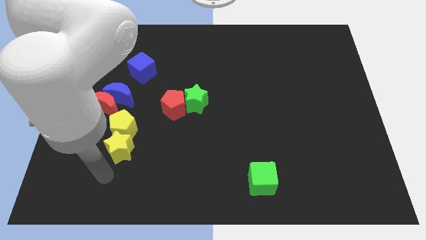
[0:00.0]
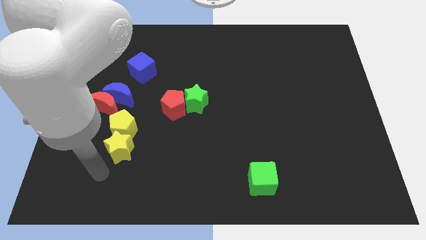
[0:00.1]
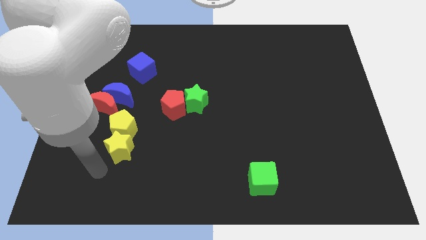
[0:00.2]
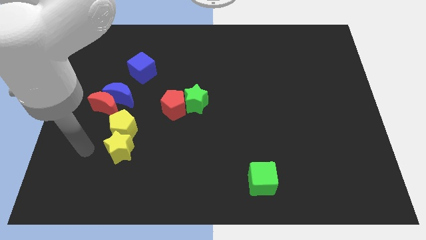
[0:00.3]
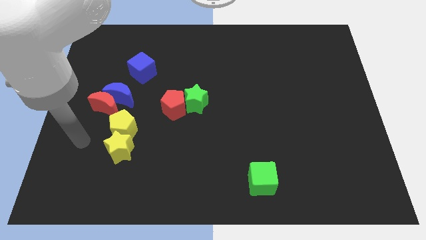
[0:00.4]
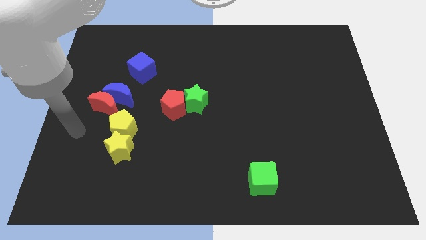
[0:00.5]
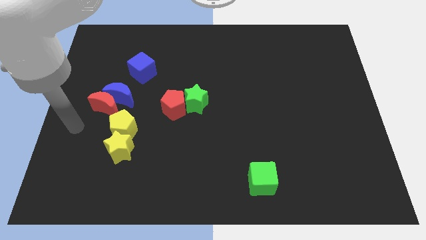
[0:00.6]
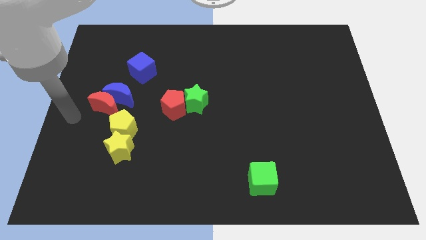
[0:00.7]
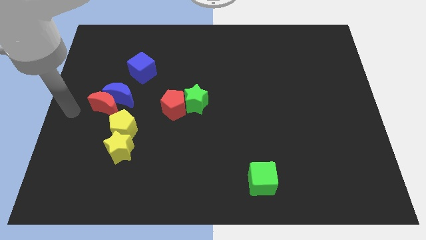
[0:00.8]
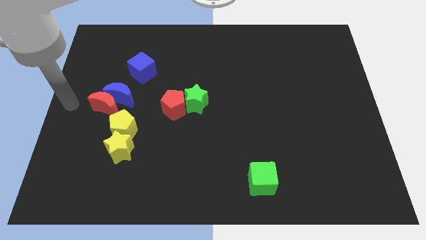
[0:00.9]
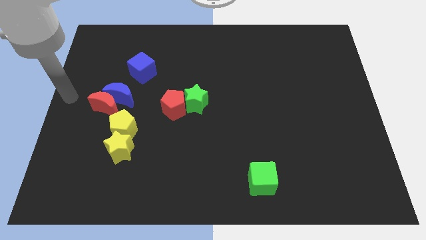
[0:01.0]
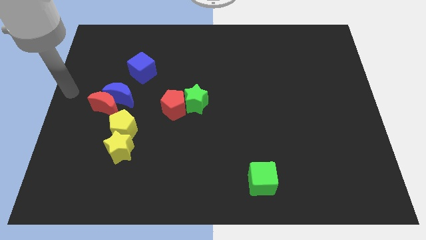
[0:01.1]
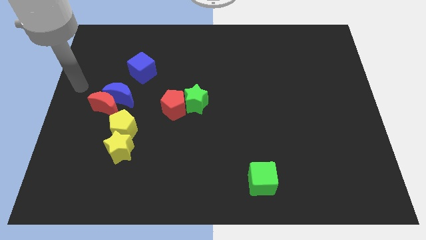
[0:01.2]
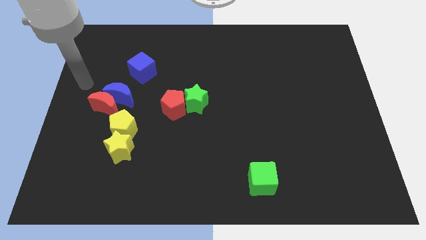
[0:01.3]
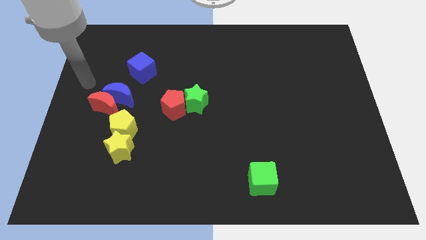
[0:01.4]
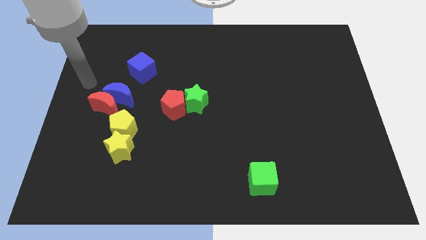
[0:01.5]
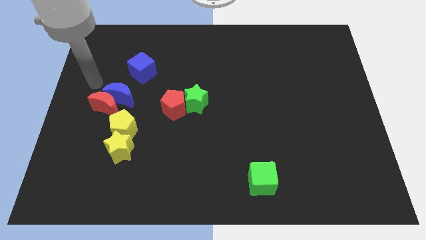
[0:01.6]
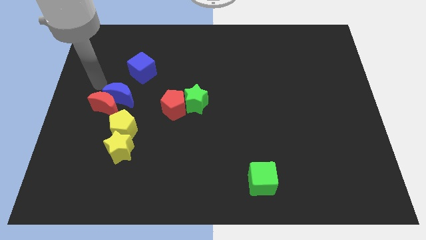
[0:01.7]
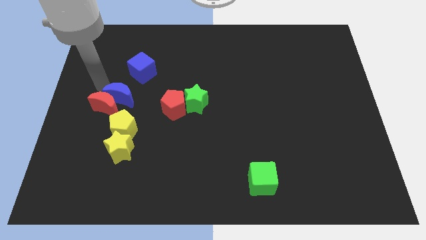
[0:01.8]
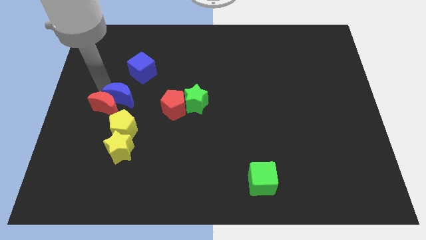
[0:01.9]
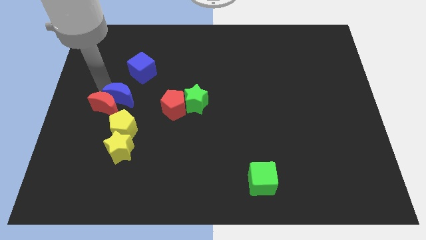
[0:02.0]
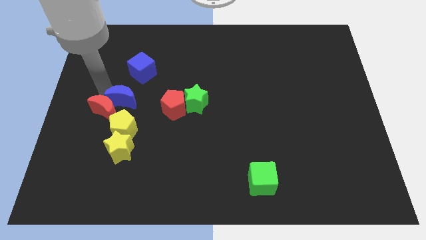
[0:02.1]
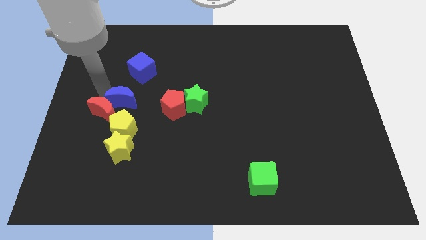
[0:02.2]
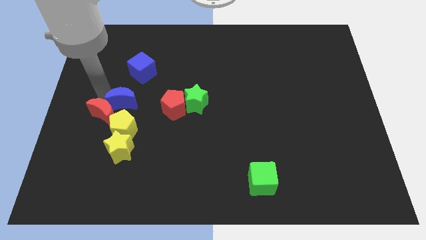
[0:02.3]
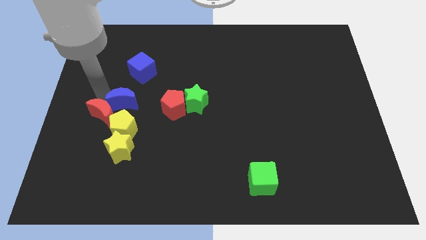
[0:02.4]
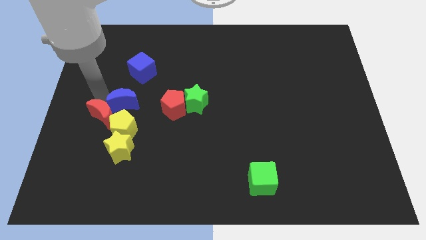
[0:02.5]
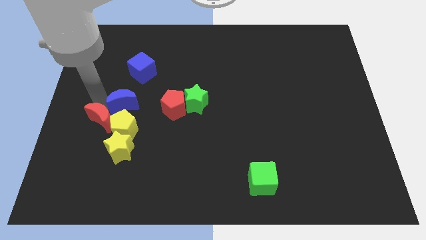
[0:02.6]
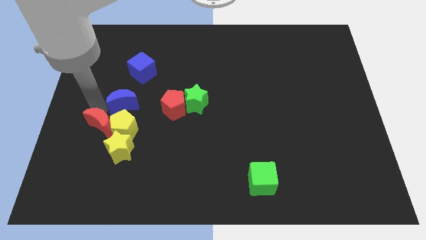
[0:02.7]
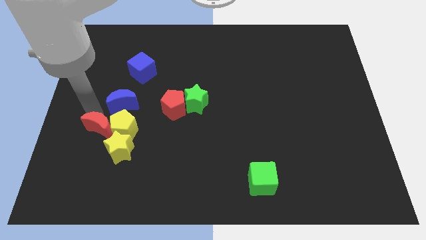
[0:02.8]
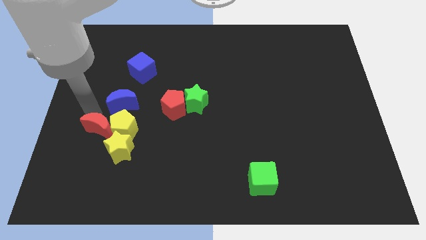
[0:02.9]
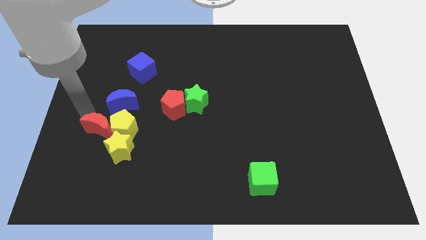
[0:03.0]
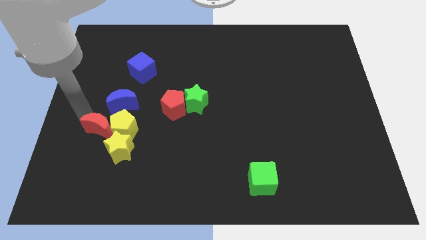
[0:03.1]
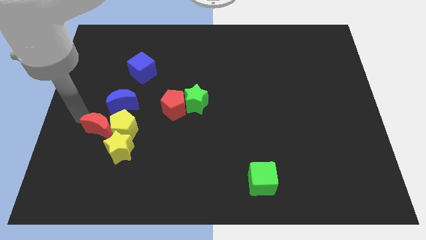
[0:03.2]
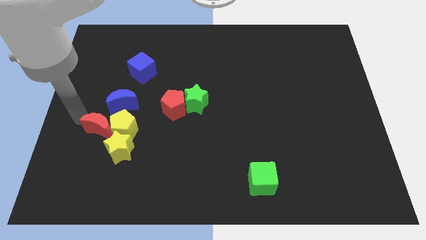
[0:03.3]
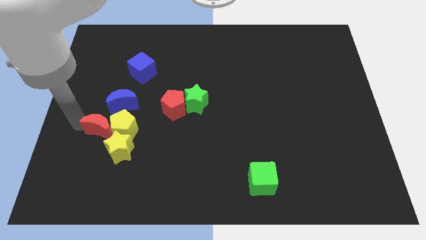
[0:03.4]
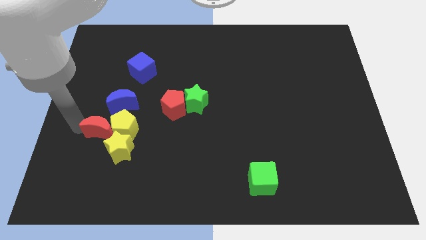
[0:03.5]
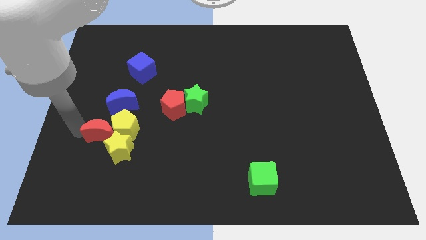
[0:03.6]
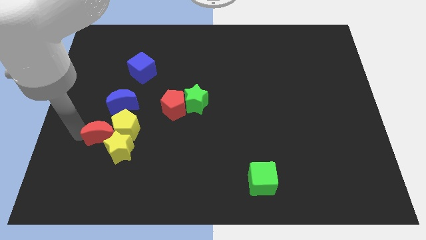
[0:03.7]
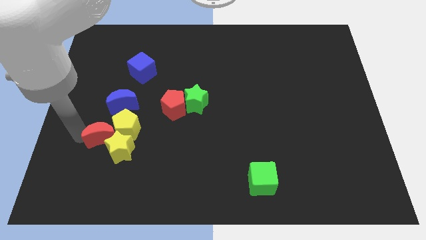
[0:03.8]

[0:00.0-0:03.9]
put the red moon next to the yellow star

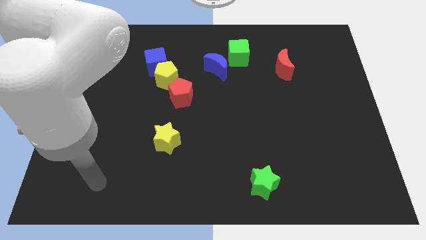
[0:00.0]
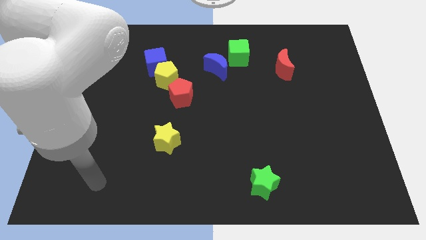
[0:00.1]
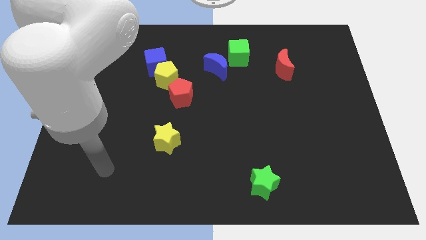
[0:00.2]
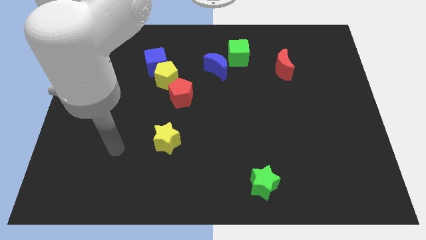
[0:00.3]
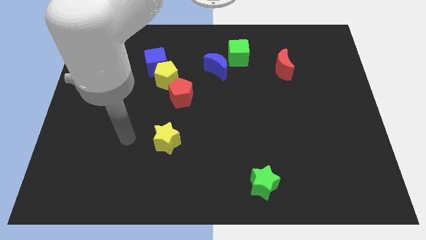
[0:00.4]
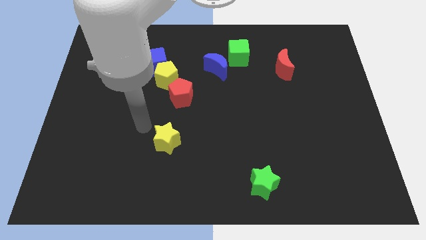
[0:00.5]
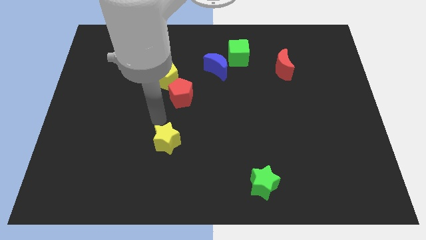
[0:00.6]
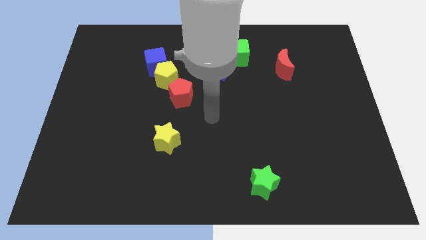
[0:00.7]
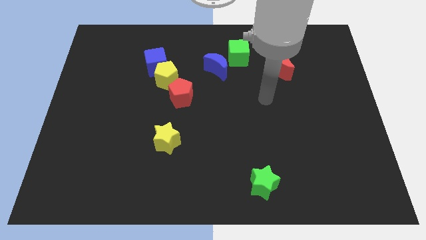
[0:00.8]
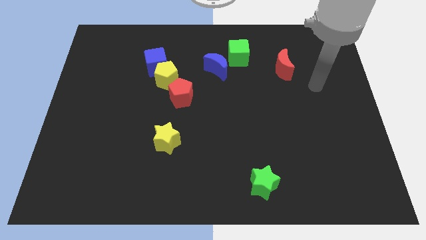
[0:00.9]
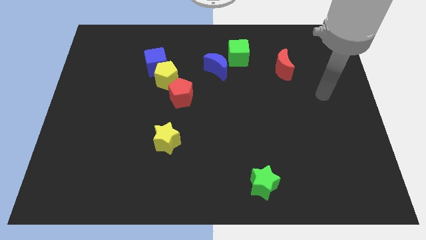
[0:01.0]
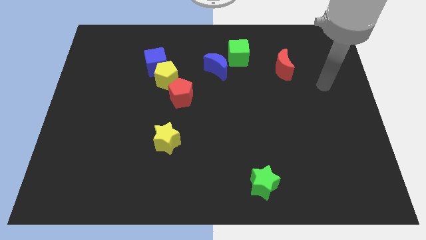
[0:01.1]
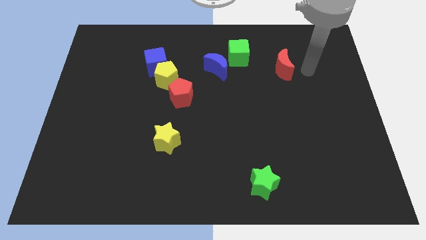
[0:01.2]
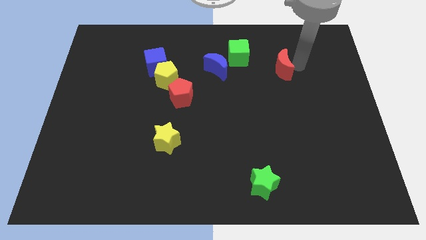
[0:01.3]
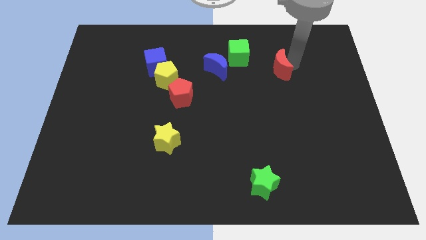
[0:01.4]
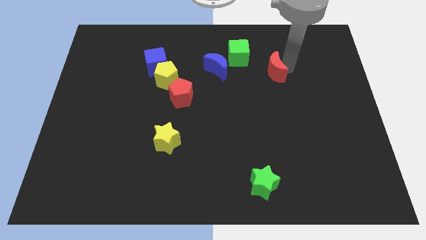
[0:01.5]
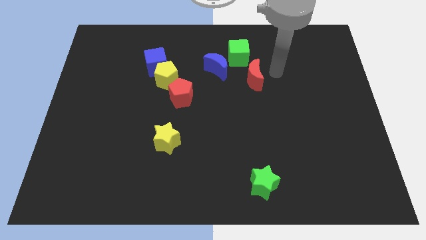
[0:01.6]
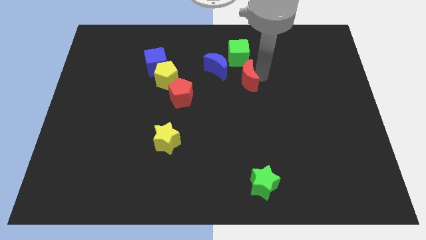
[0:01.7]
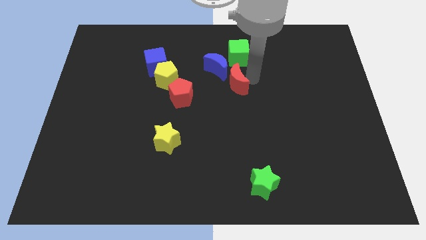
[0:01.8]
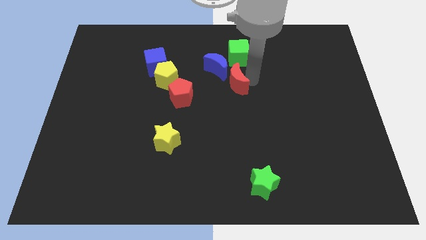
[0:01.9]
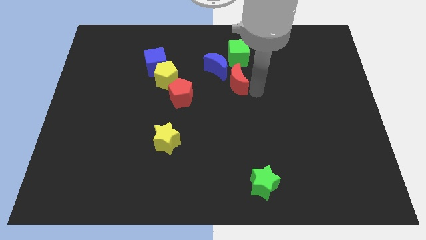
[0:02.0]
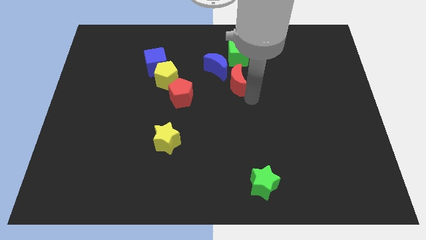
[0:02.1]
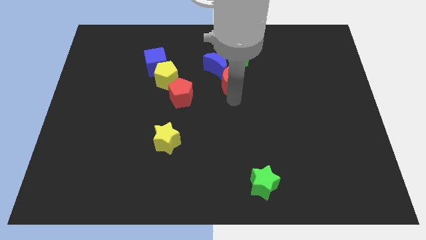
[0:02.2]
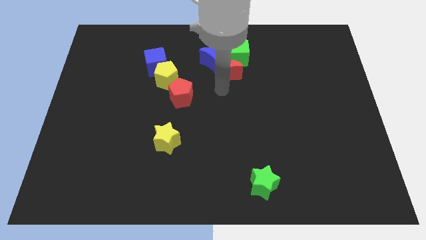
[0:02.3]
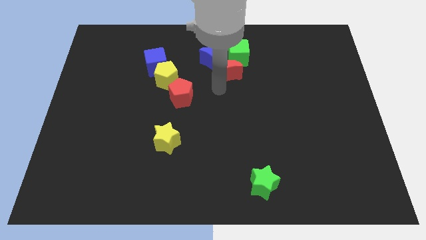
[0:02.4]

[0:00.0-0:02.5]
move the red moon towards the blue moon

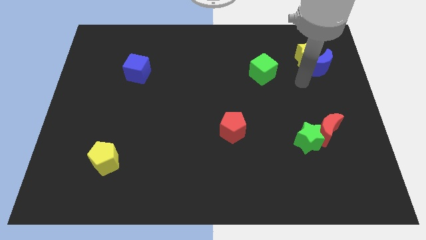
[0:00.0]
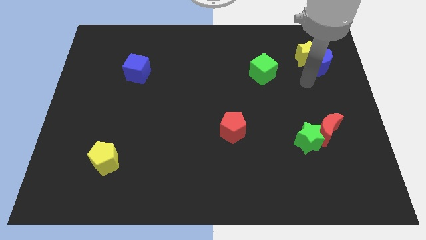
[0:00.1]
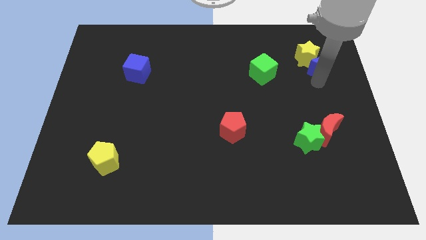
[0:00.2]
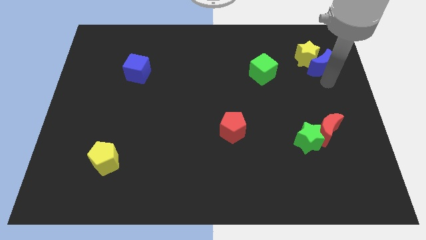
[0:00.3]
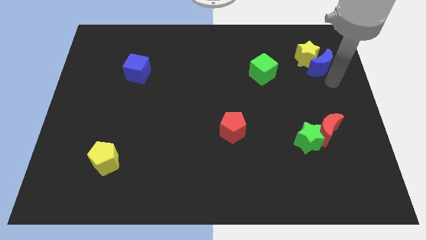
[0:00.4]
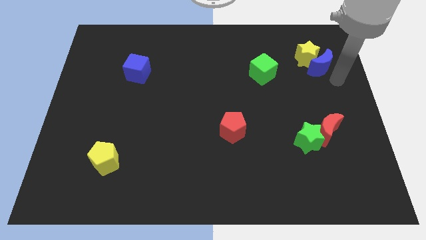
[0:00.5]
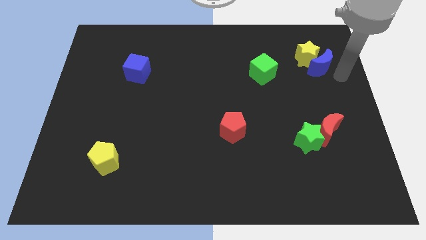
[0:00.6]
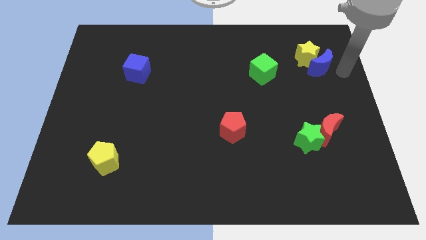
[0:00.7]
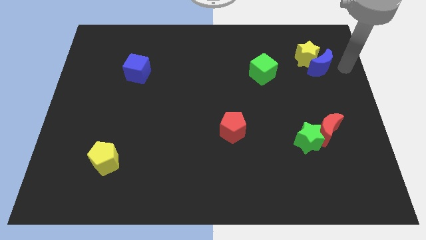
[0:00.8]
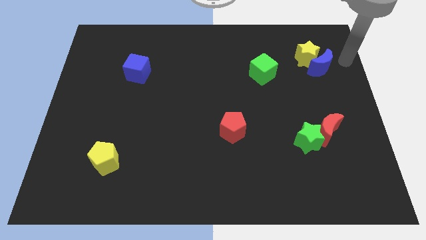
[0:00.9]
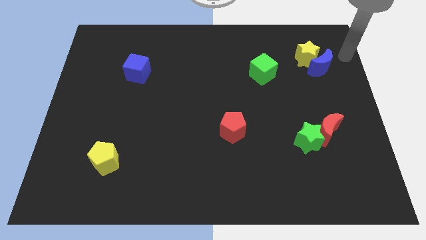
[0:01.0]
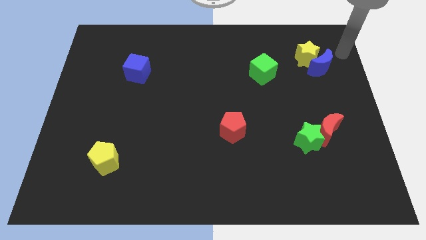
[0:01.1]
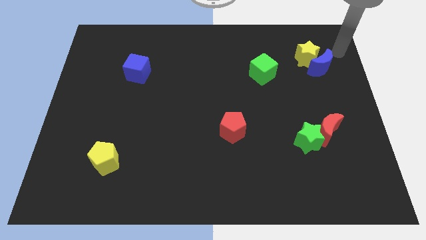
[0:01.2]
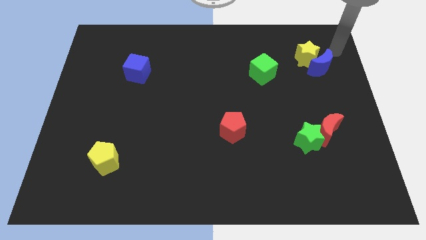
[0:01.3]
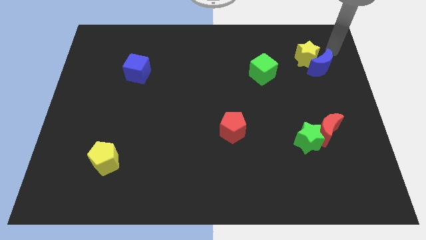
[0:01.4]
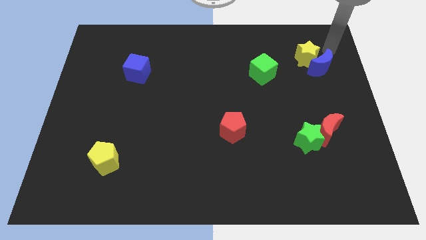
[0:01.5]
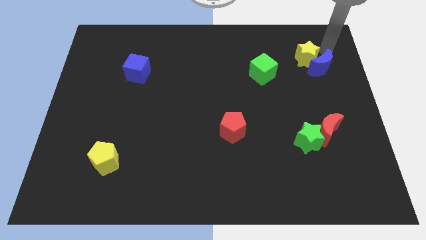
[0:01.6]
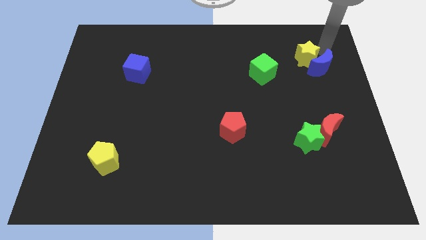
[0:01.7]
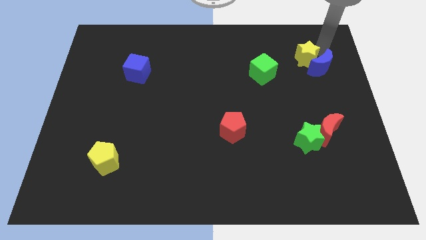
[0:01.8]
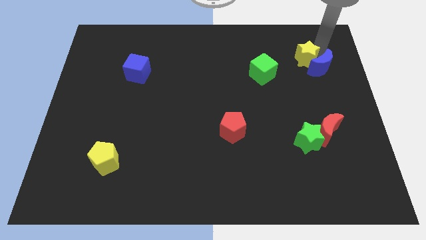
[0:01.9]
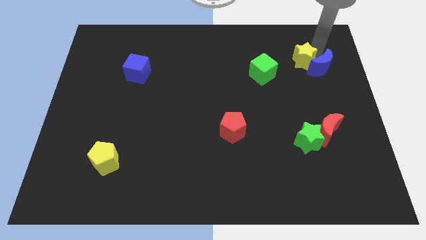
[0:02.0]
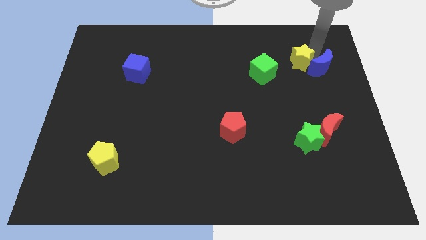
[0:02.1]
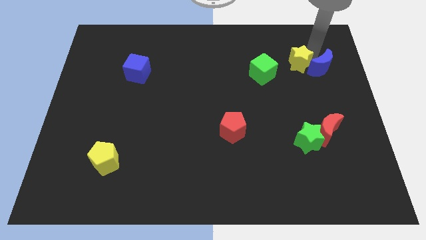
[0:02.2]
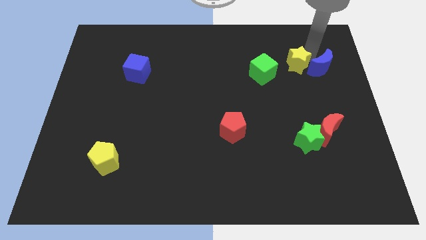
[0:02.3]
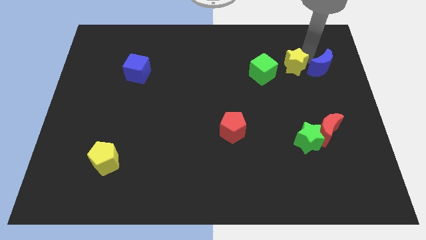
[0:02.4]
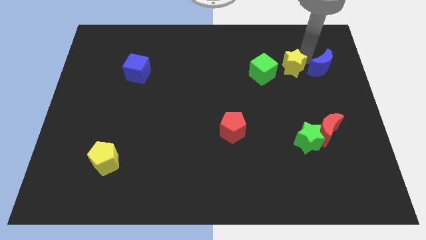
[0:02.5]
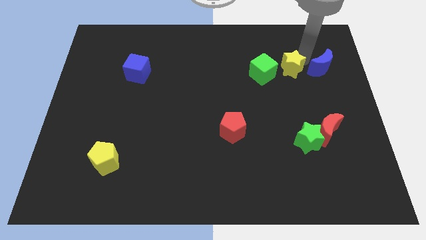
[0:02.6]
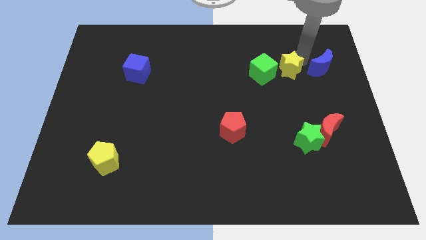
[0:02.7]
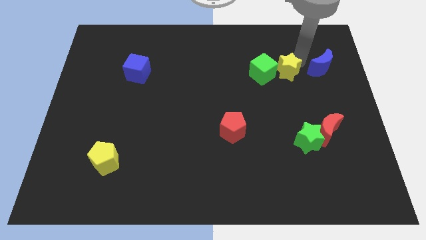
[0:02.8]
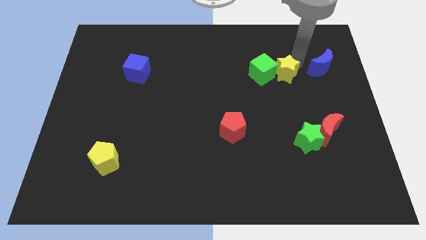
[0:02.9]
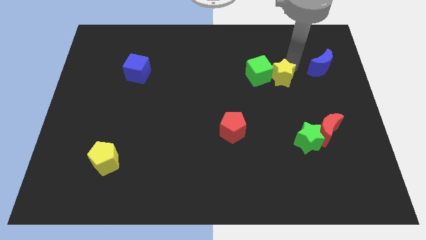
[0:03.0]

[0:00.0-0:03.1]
push the yellow star next to the green cube
